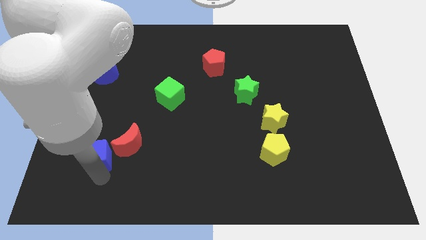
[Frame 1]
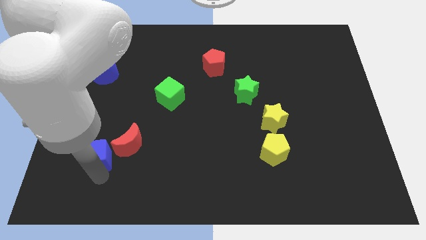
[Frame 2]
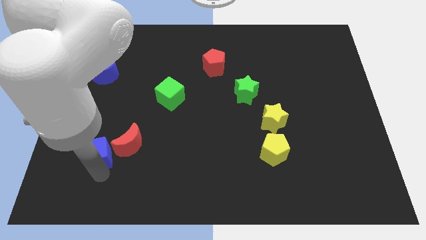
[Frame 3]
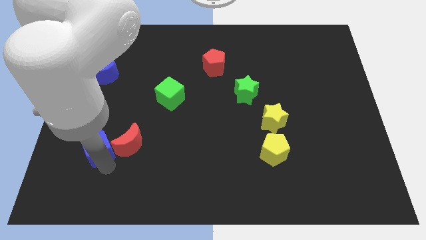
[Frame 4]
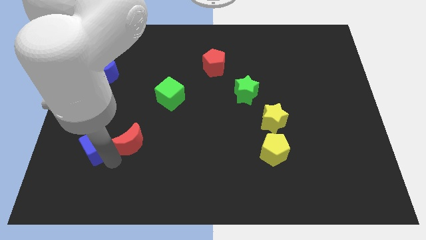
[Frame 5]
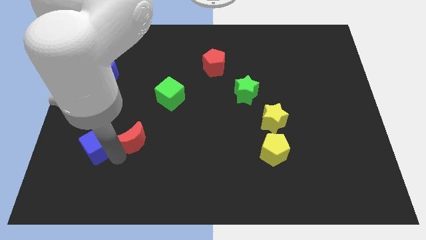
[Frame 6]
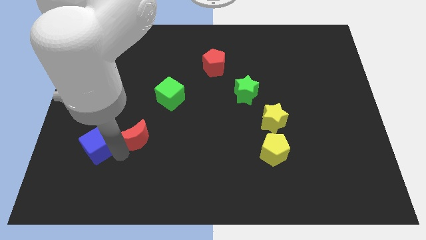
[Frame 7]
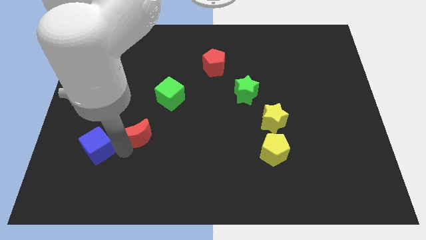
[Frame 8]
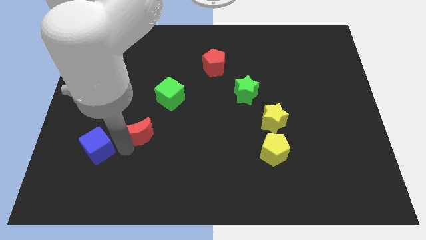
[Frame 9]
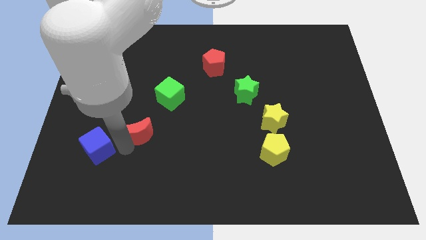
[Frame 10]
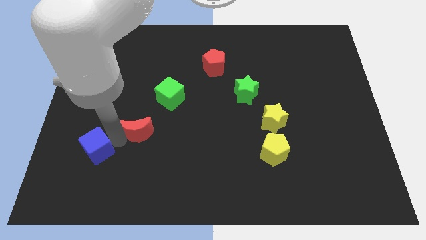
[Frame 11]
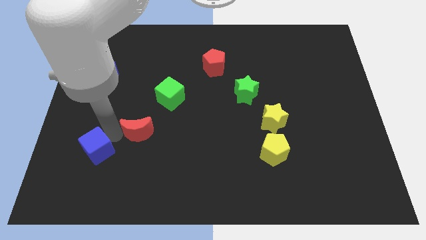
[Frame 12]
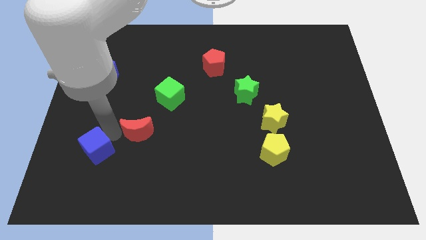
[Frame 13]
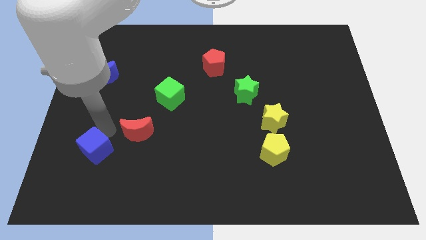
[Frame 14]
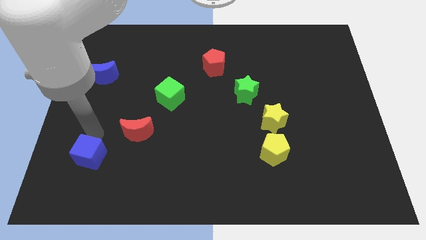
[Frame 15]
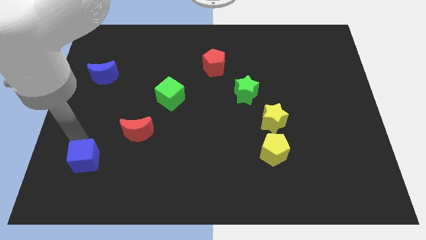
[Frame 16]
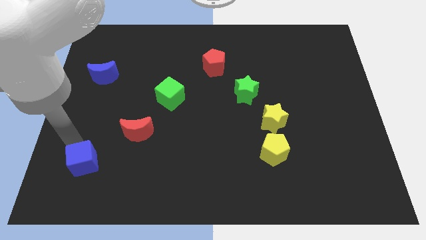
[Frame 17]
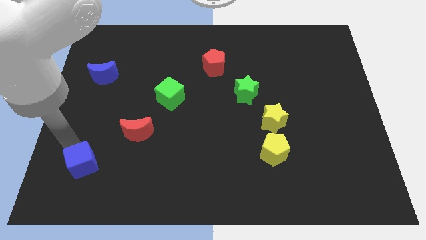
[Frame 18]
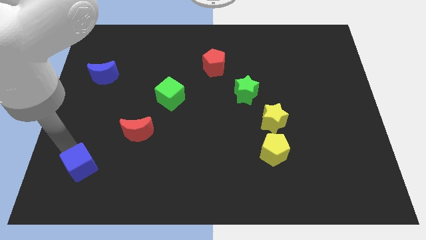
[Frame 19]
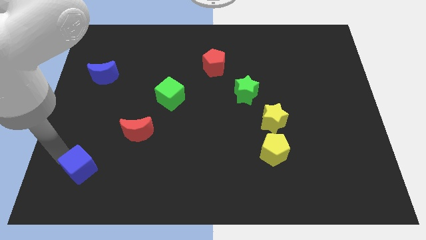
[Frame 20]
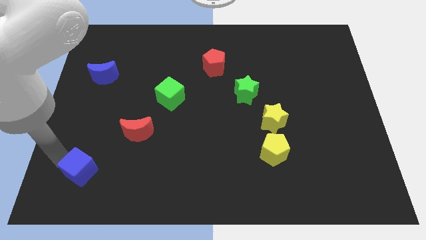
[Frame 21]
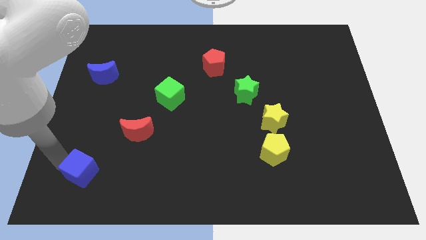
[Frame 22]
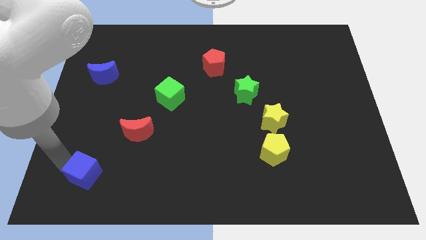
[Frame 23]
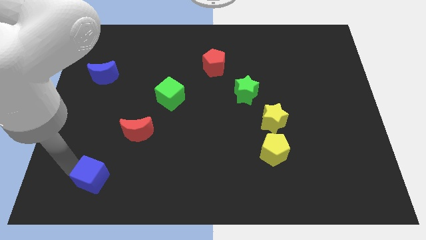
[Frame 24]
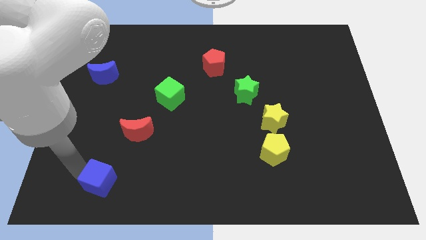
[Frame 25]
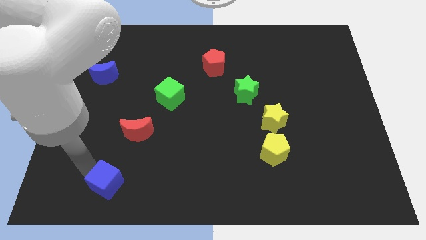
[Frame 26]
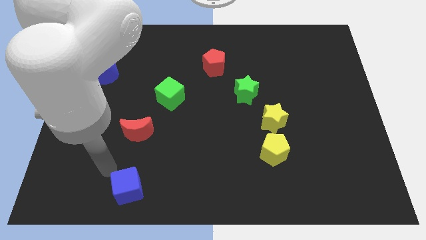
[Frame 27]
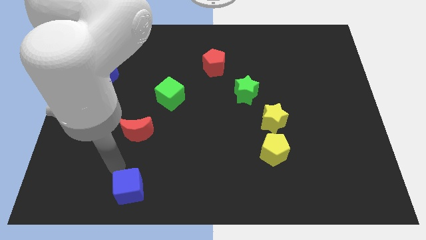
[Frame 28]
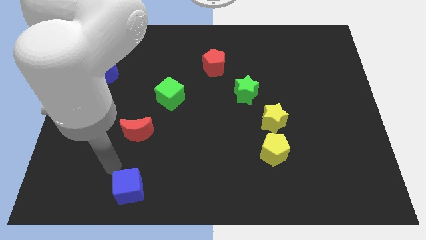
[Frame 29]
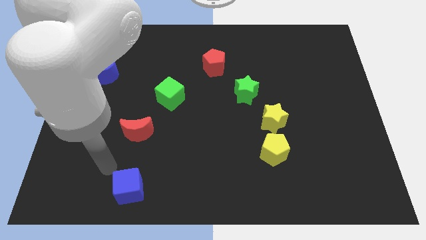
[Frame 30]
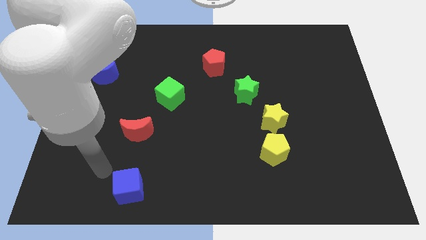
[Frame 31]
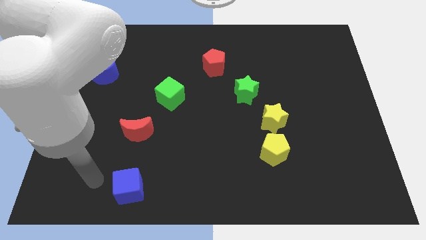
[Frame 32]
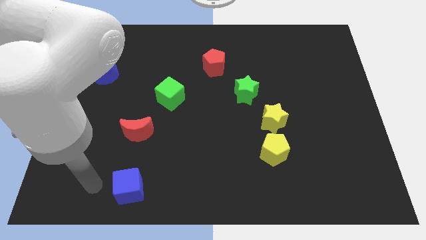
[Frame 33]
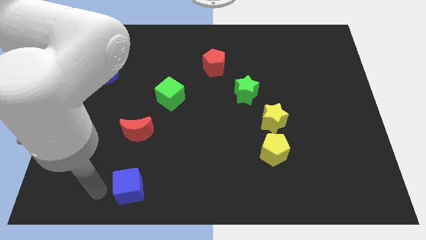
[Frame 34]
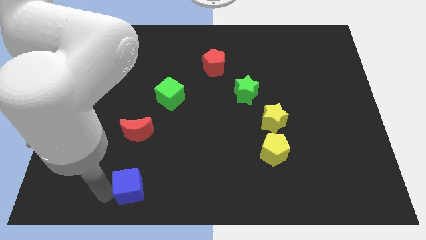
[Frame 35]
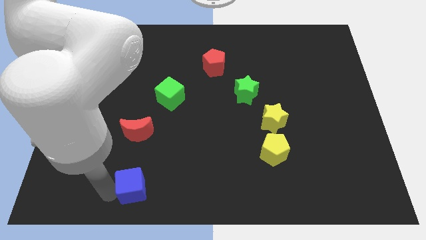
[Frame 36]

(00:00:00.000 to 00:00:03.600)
place the blue cube below the red moon

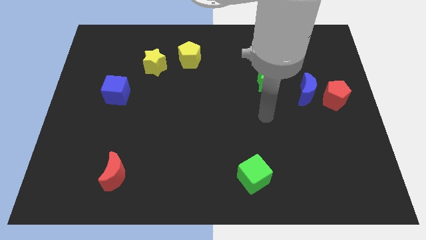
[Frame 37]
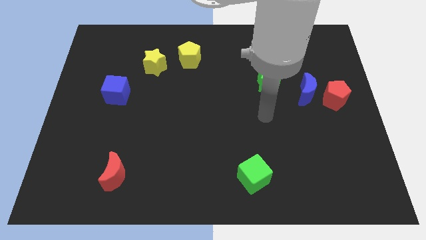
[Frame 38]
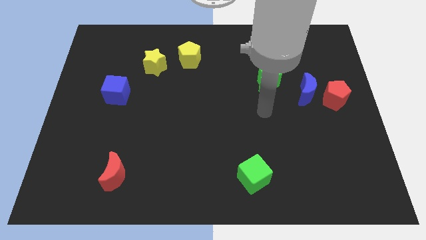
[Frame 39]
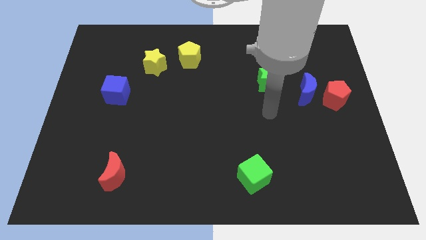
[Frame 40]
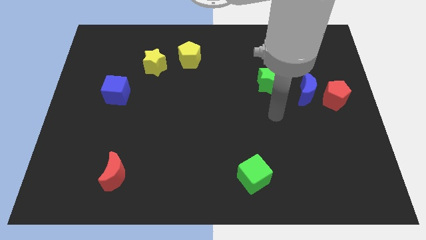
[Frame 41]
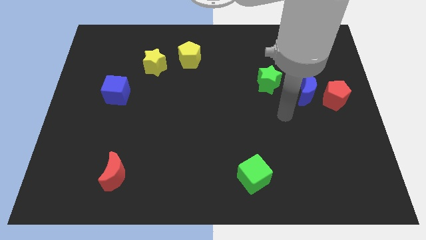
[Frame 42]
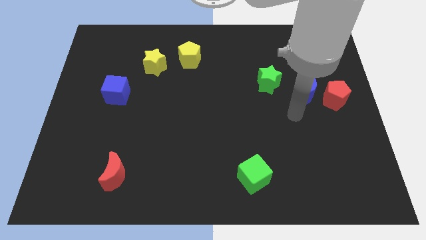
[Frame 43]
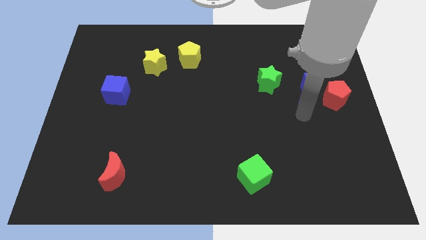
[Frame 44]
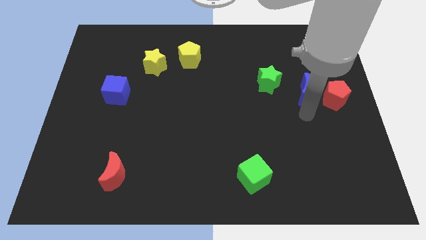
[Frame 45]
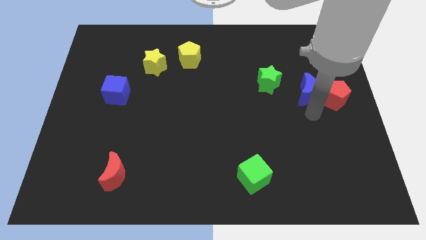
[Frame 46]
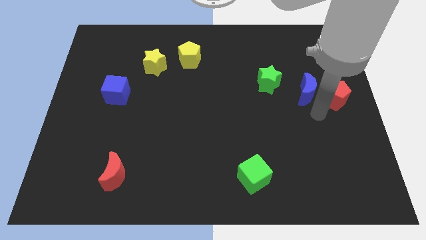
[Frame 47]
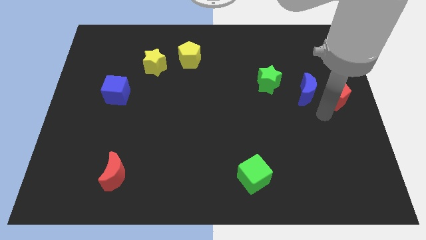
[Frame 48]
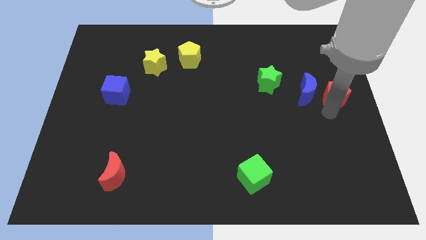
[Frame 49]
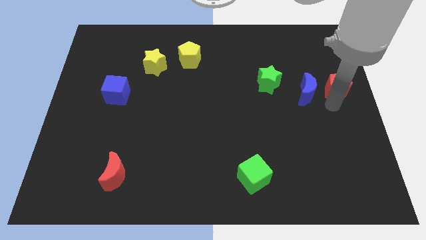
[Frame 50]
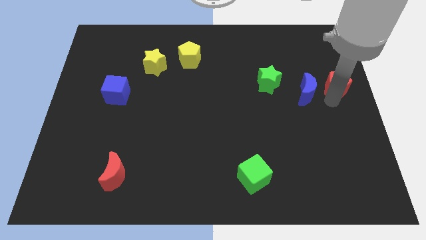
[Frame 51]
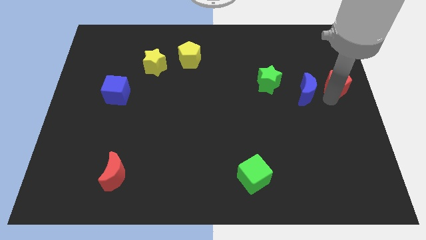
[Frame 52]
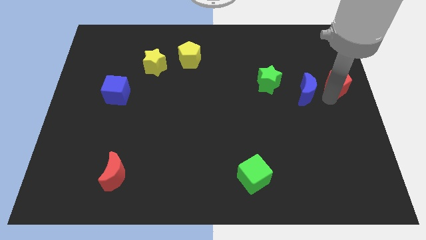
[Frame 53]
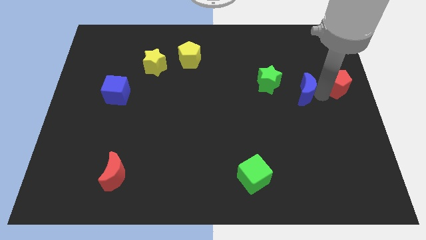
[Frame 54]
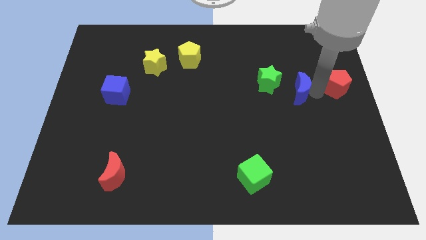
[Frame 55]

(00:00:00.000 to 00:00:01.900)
push the red pentagon to the right side of the board

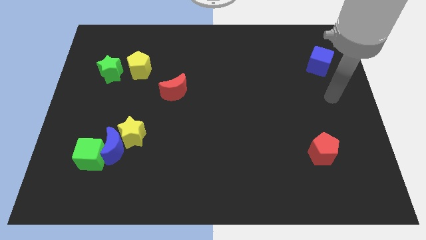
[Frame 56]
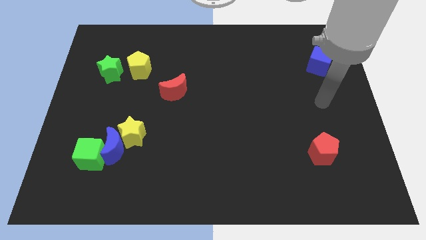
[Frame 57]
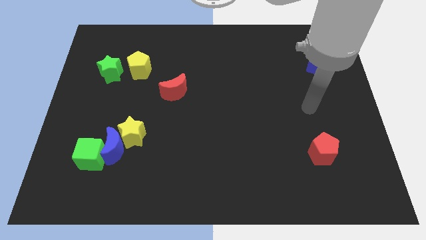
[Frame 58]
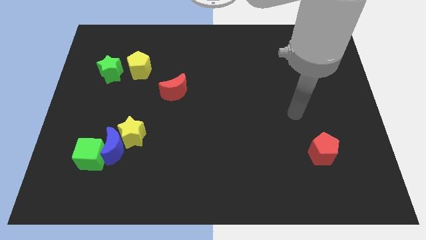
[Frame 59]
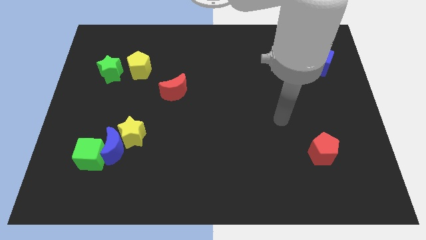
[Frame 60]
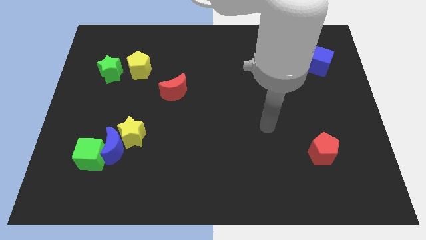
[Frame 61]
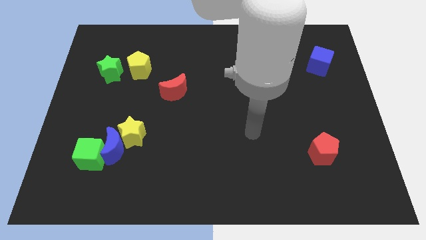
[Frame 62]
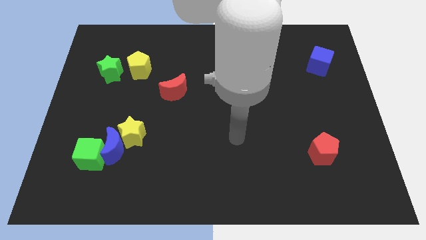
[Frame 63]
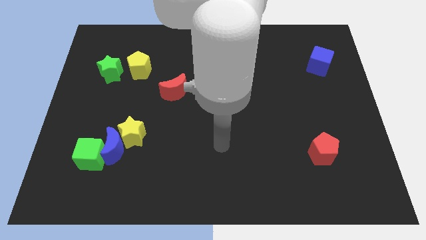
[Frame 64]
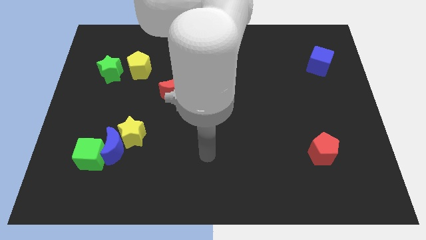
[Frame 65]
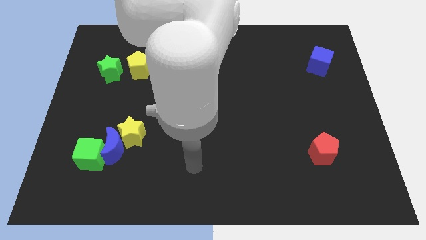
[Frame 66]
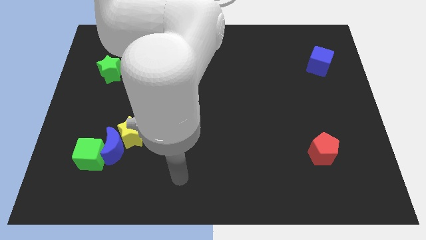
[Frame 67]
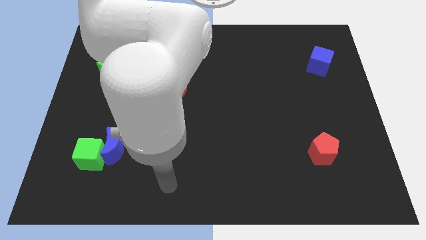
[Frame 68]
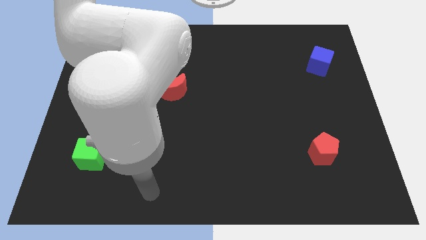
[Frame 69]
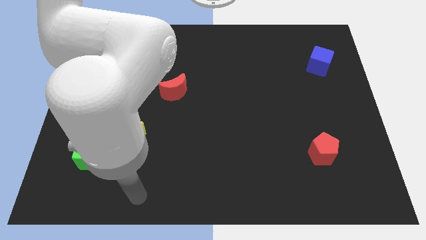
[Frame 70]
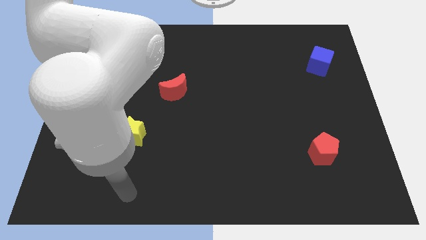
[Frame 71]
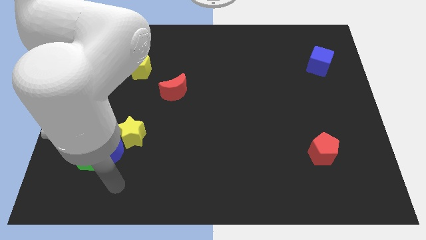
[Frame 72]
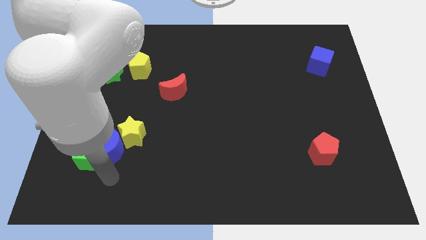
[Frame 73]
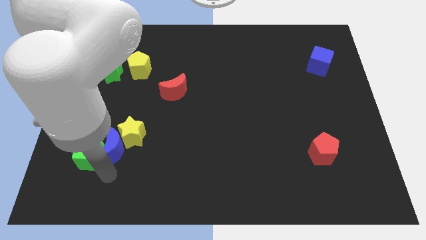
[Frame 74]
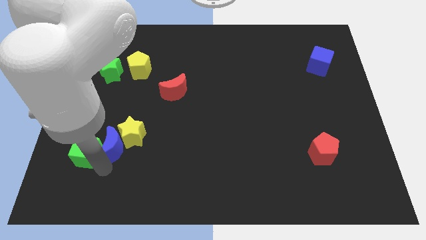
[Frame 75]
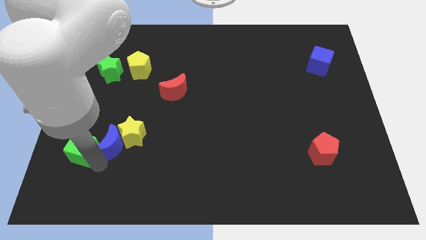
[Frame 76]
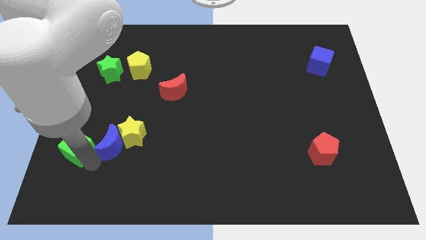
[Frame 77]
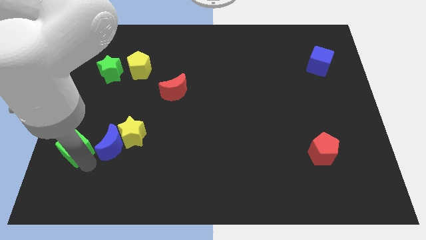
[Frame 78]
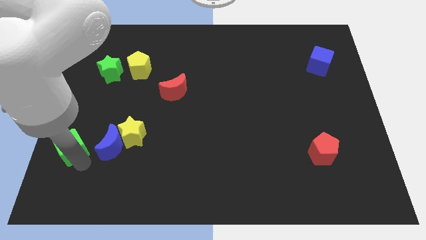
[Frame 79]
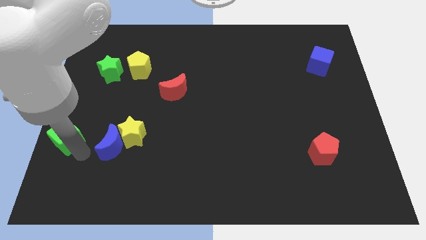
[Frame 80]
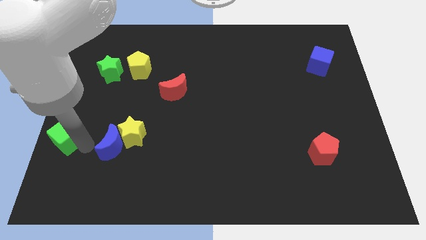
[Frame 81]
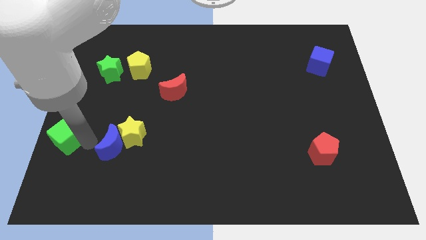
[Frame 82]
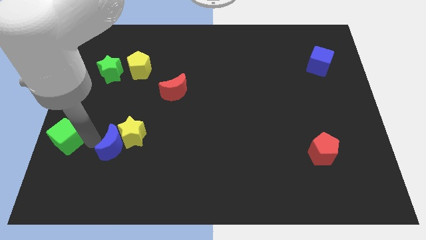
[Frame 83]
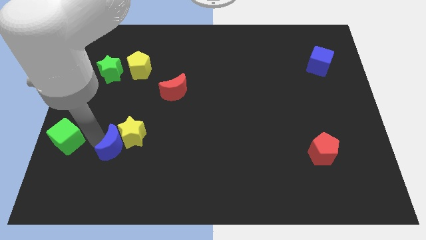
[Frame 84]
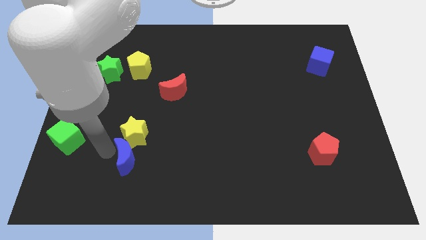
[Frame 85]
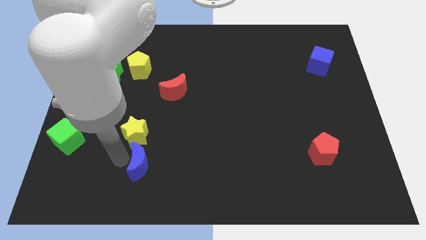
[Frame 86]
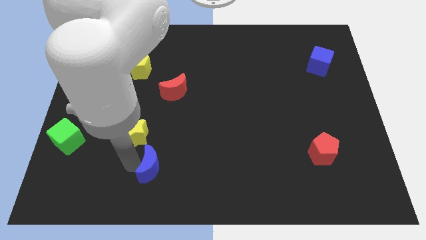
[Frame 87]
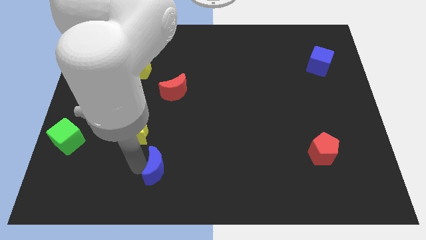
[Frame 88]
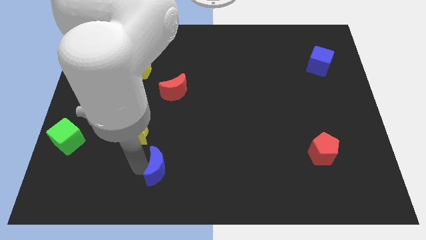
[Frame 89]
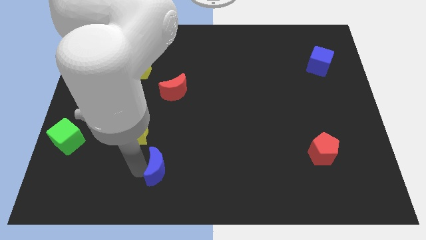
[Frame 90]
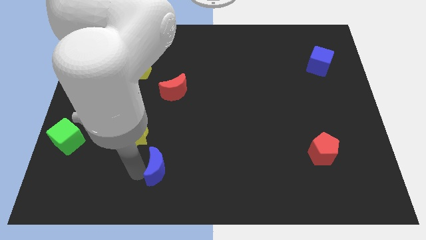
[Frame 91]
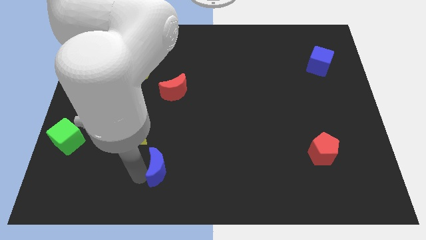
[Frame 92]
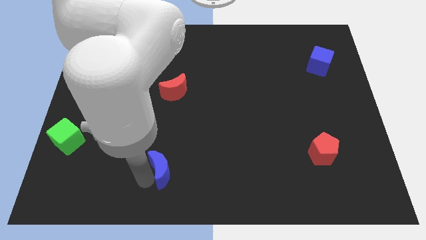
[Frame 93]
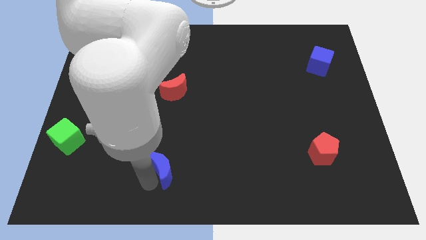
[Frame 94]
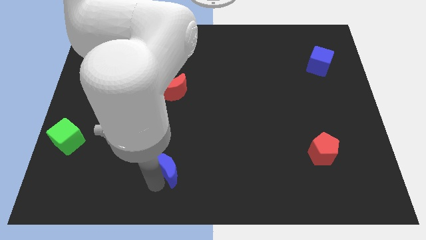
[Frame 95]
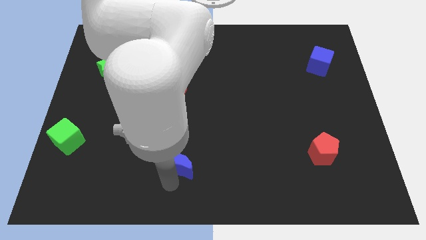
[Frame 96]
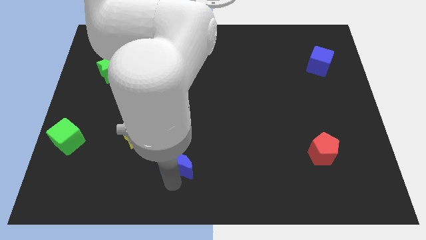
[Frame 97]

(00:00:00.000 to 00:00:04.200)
place blue moon to the bottom right of the yellow star
